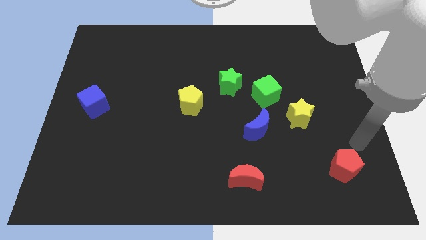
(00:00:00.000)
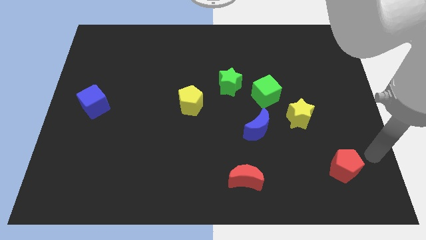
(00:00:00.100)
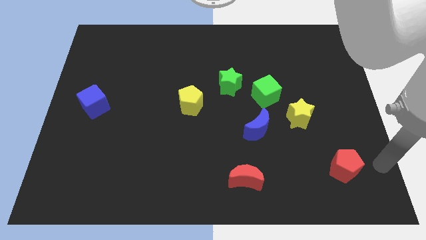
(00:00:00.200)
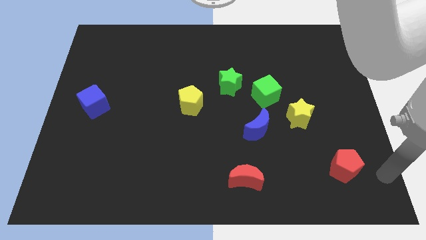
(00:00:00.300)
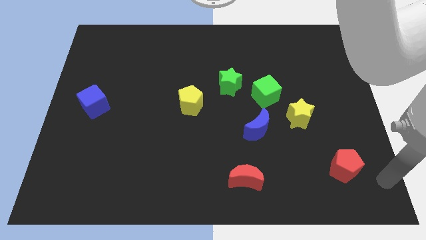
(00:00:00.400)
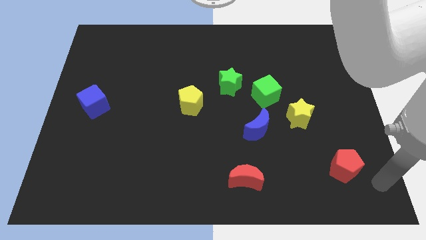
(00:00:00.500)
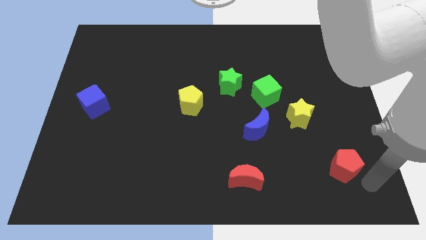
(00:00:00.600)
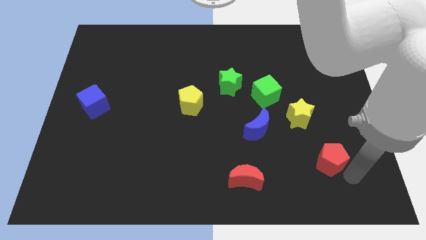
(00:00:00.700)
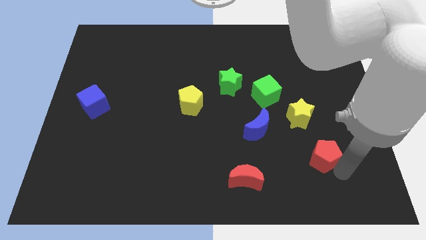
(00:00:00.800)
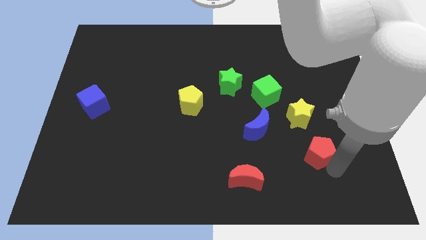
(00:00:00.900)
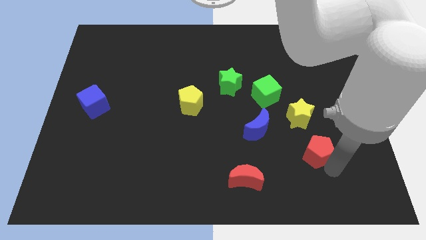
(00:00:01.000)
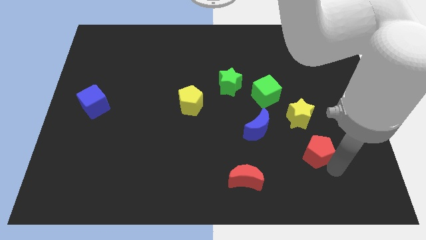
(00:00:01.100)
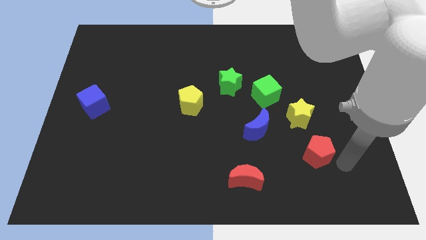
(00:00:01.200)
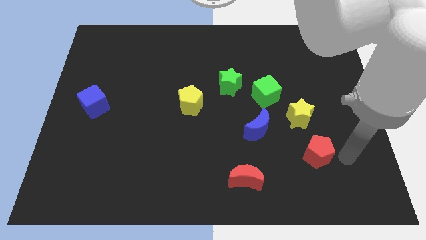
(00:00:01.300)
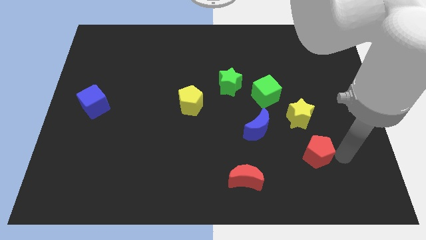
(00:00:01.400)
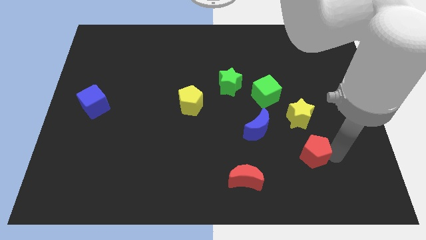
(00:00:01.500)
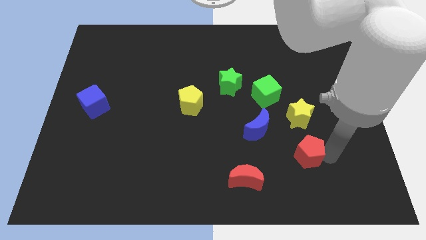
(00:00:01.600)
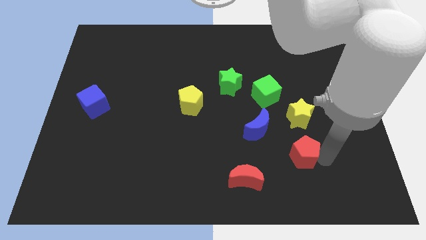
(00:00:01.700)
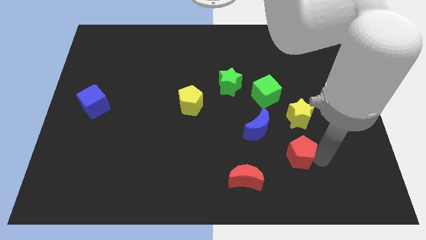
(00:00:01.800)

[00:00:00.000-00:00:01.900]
push red pentagon below yellow star

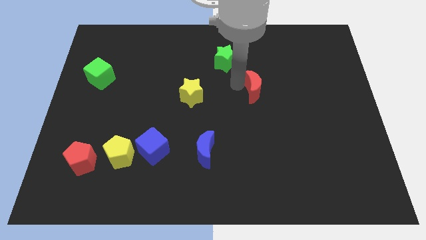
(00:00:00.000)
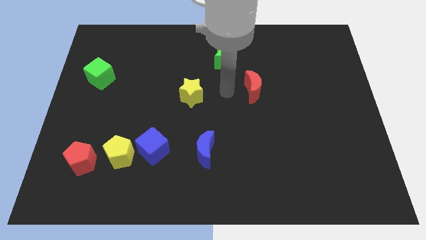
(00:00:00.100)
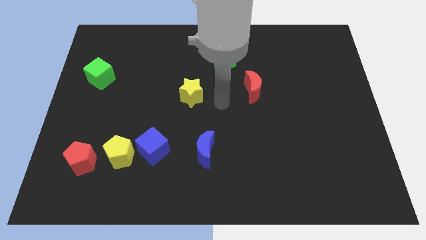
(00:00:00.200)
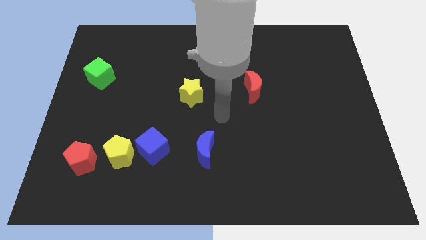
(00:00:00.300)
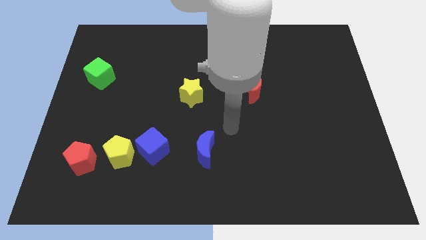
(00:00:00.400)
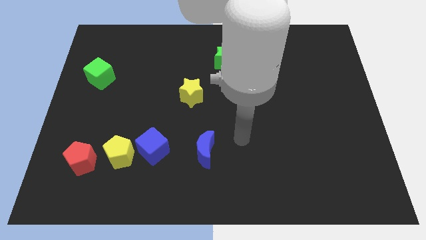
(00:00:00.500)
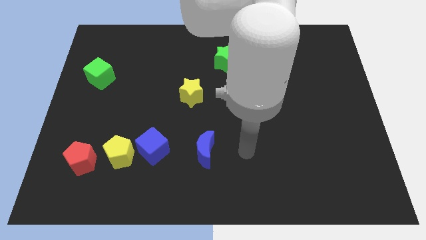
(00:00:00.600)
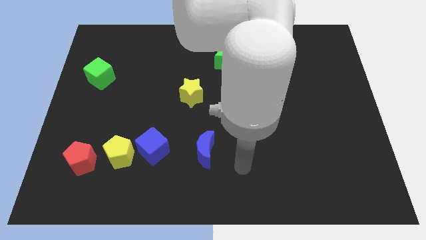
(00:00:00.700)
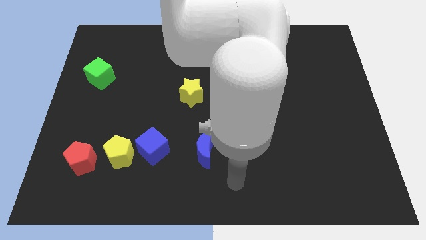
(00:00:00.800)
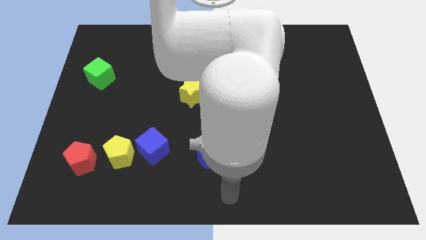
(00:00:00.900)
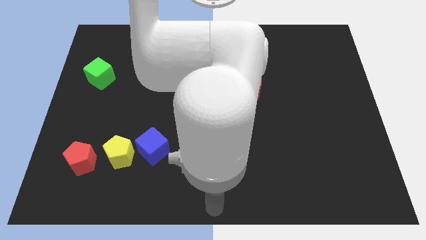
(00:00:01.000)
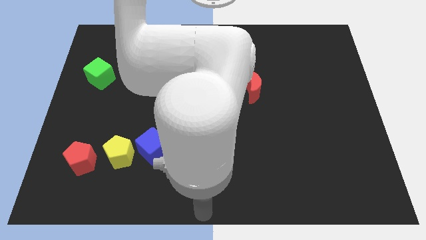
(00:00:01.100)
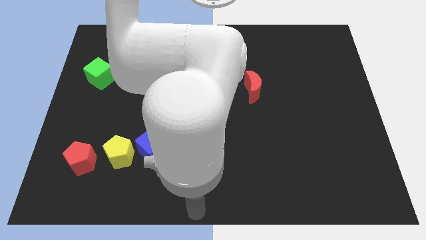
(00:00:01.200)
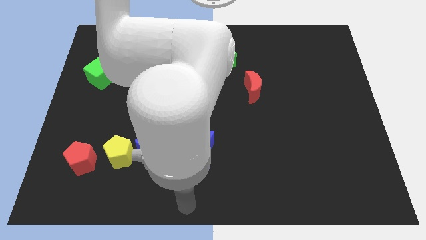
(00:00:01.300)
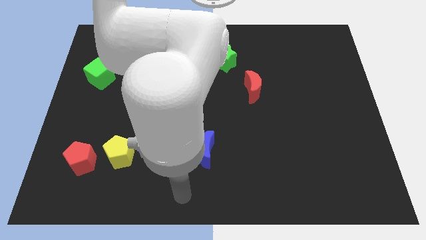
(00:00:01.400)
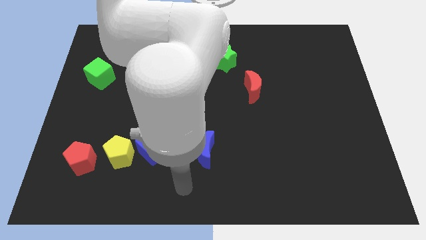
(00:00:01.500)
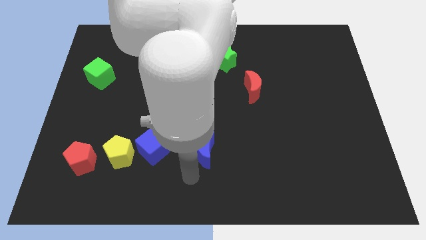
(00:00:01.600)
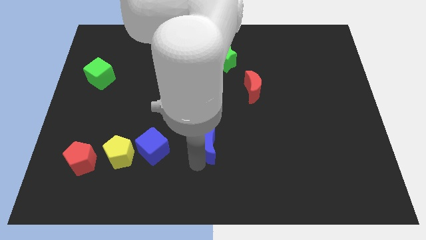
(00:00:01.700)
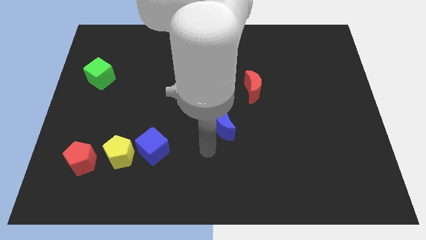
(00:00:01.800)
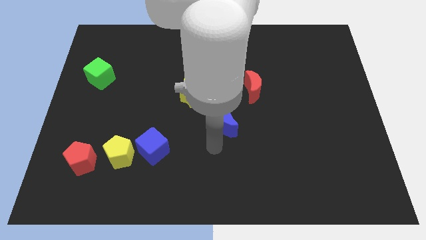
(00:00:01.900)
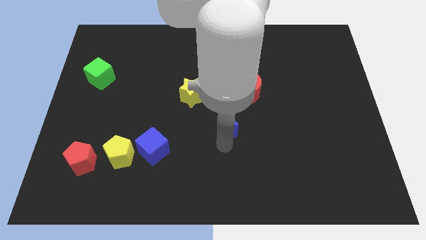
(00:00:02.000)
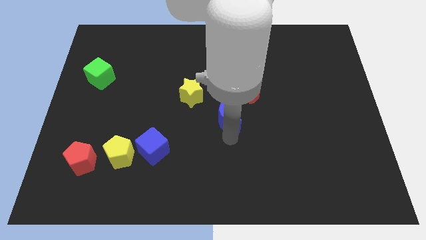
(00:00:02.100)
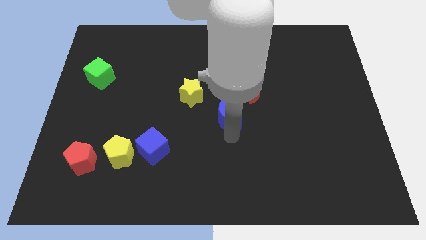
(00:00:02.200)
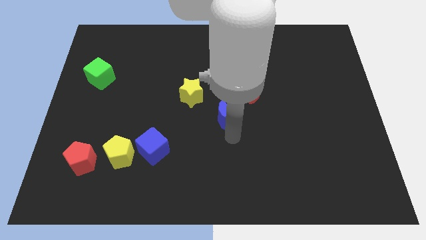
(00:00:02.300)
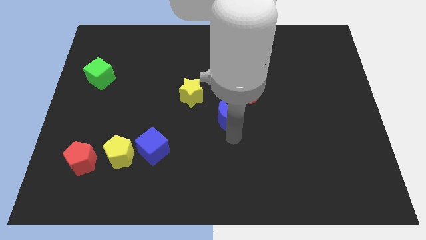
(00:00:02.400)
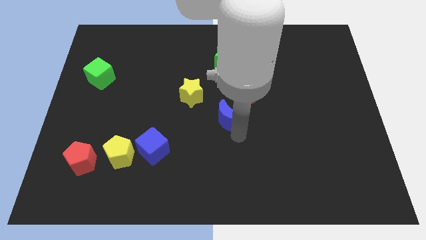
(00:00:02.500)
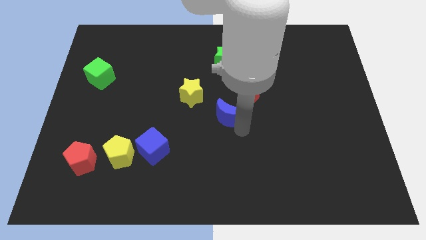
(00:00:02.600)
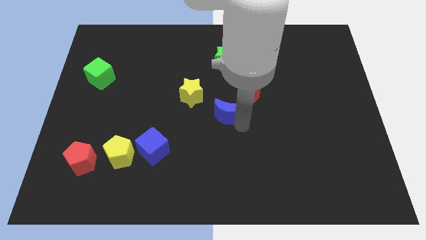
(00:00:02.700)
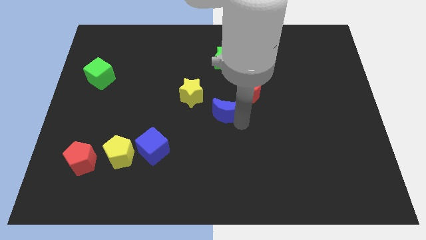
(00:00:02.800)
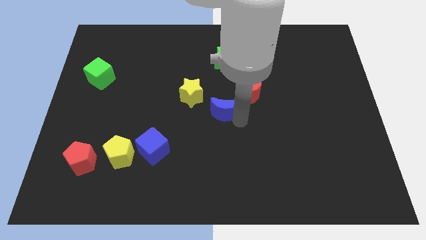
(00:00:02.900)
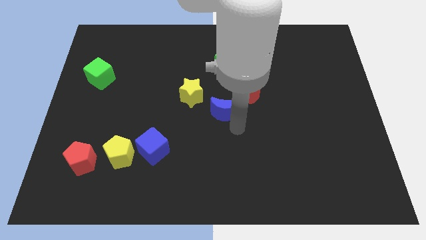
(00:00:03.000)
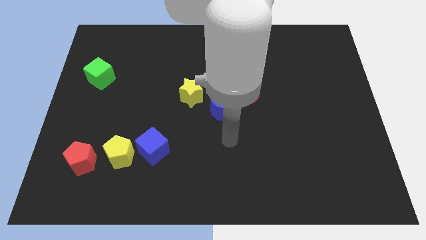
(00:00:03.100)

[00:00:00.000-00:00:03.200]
move the blue crescent diagonally to the red crescent

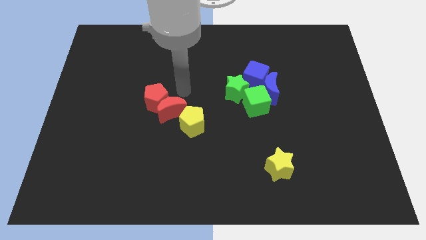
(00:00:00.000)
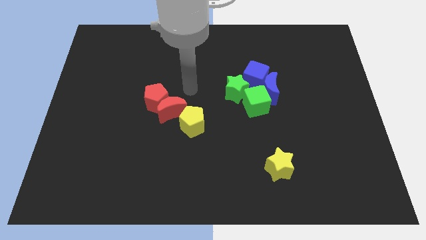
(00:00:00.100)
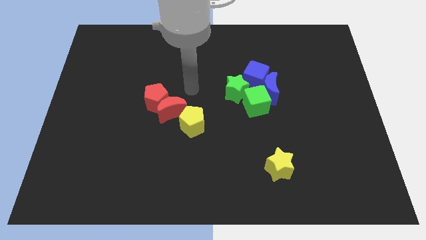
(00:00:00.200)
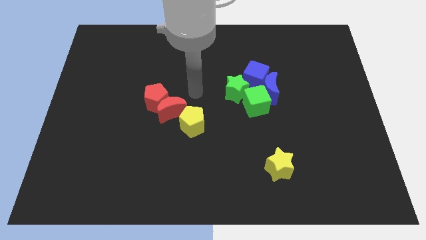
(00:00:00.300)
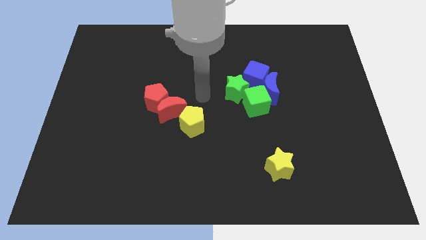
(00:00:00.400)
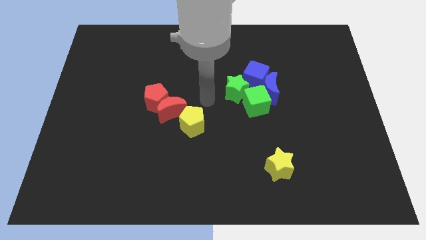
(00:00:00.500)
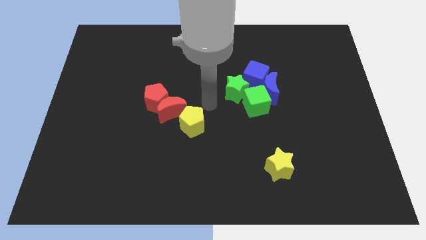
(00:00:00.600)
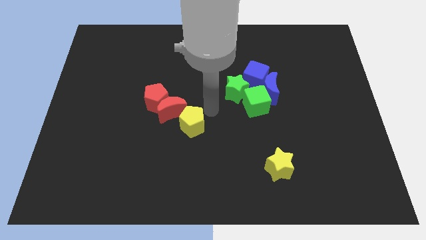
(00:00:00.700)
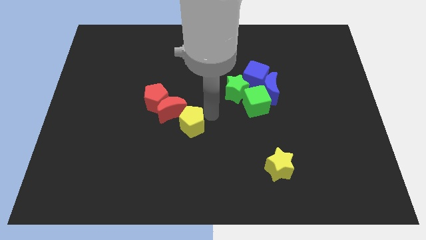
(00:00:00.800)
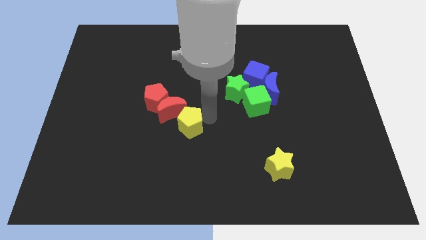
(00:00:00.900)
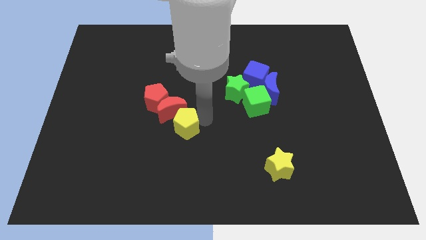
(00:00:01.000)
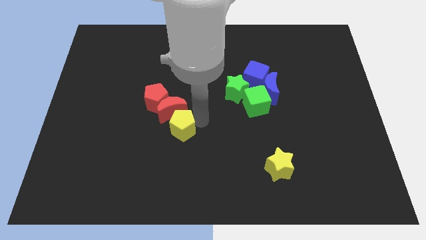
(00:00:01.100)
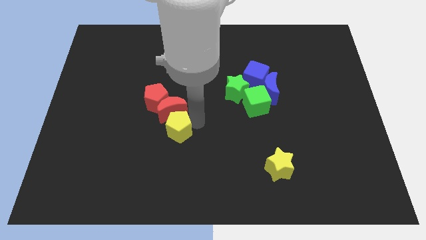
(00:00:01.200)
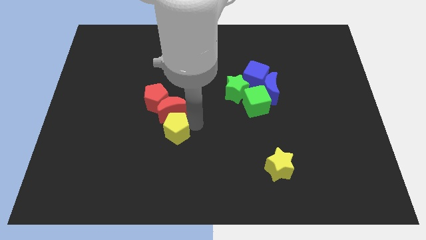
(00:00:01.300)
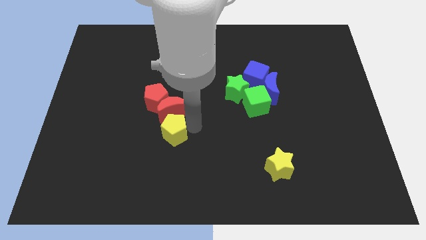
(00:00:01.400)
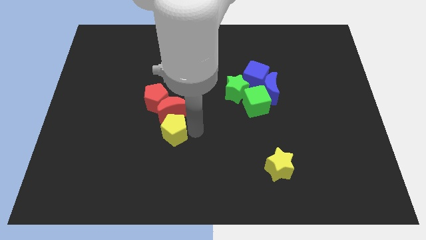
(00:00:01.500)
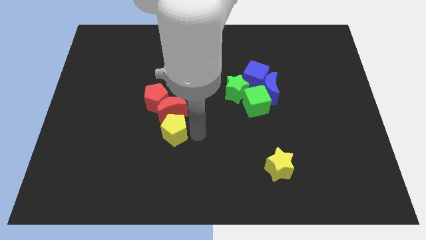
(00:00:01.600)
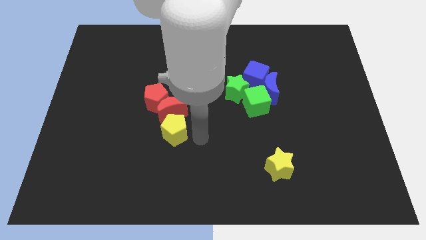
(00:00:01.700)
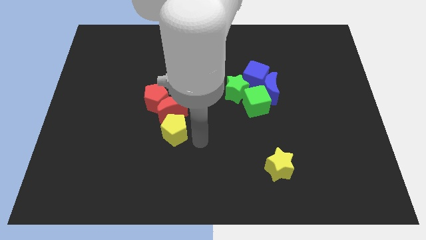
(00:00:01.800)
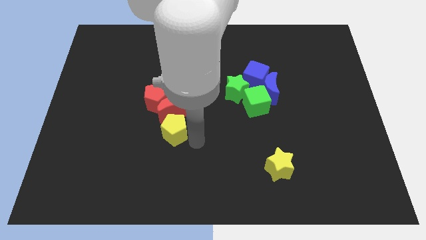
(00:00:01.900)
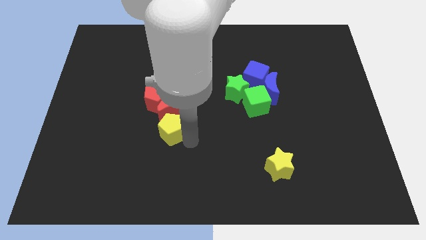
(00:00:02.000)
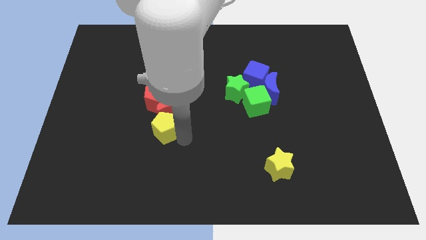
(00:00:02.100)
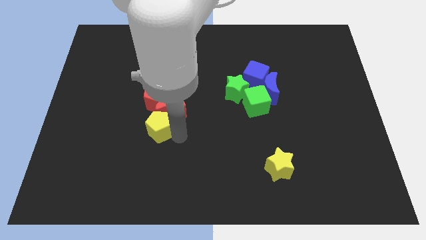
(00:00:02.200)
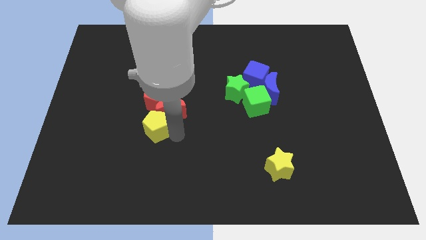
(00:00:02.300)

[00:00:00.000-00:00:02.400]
move the yellow pentagon to the left bottom side of the red moon

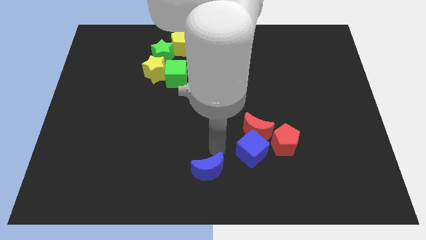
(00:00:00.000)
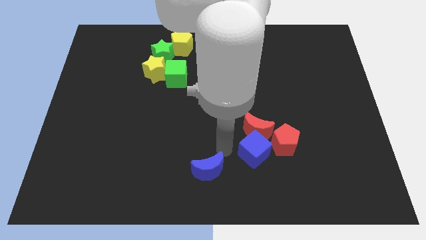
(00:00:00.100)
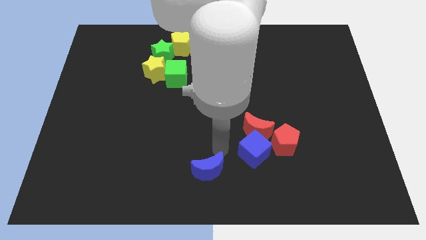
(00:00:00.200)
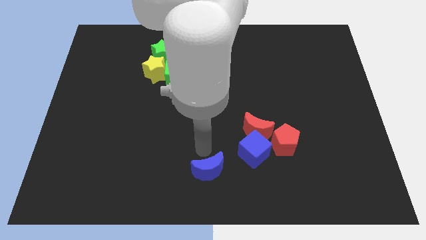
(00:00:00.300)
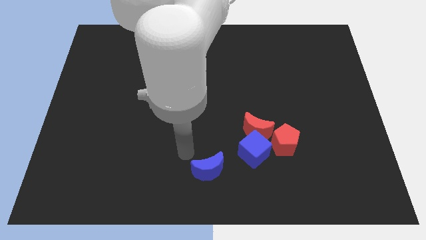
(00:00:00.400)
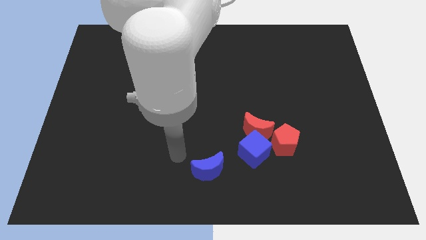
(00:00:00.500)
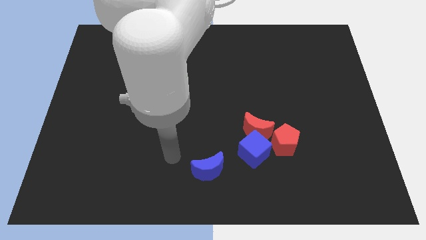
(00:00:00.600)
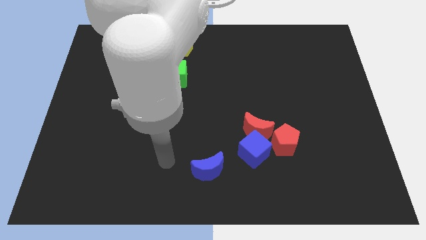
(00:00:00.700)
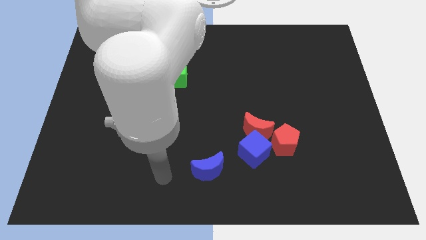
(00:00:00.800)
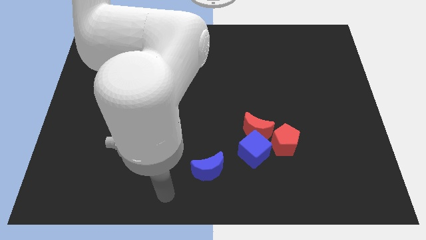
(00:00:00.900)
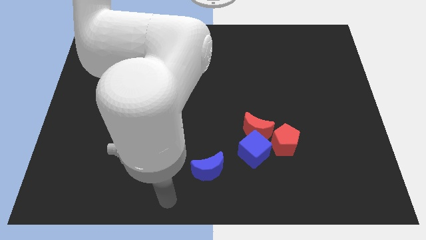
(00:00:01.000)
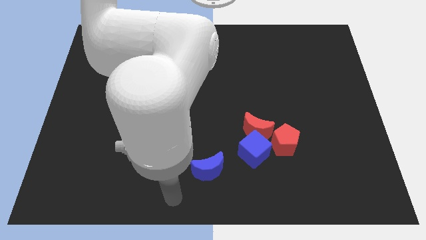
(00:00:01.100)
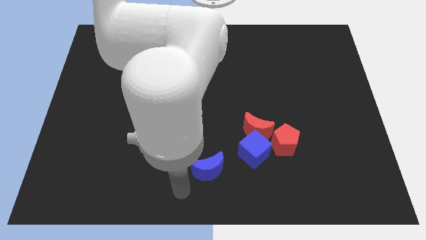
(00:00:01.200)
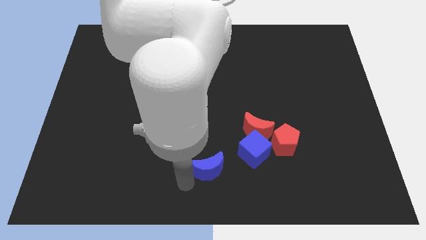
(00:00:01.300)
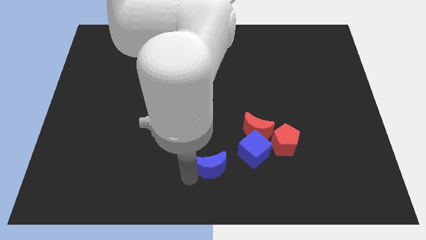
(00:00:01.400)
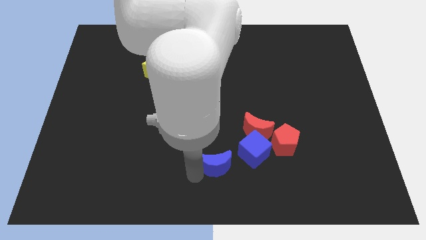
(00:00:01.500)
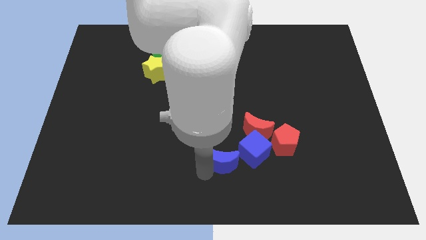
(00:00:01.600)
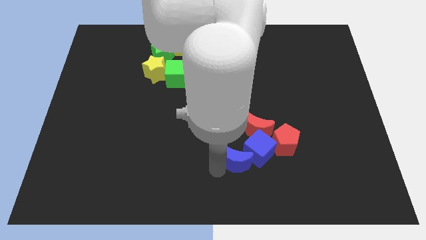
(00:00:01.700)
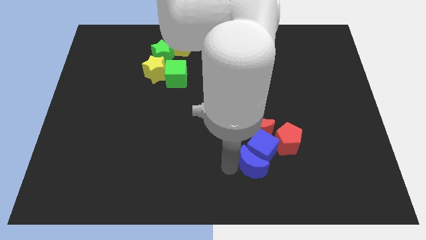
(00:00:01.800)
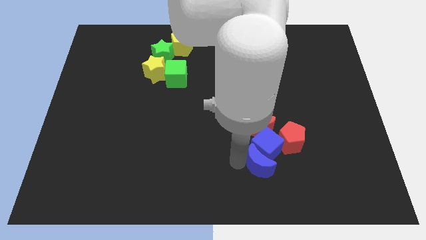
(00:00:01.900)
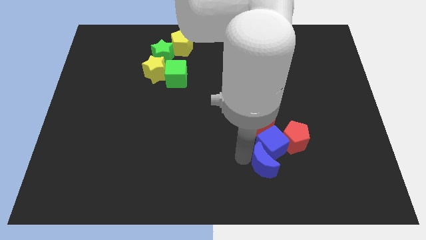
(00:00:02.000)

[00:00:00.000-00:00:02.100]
place the blue blocks at one sidebelow thw red blocks
